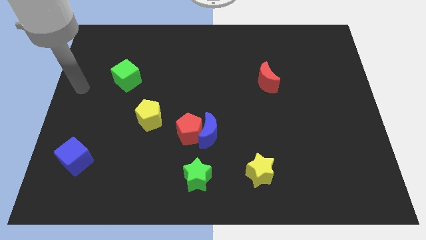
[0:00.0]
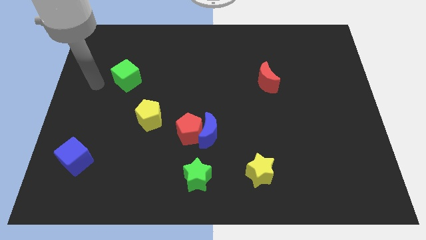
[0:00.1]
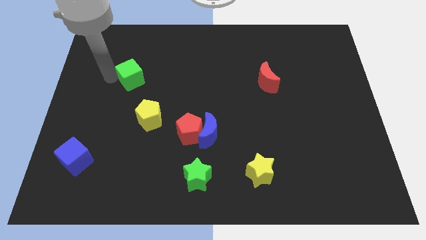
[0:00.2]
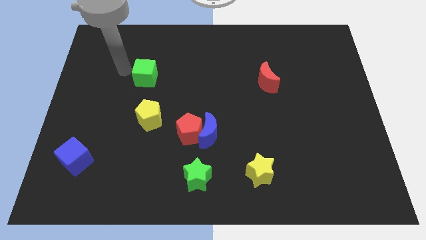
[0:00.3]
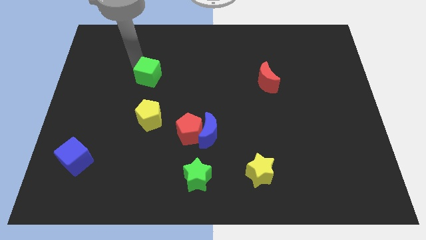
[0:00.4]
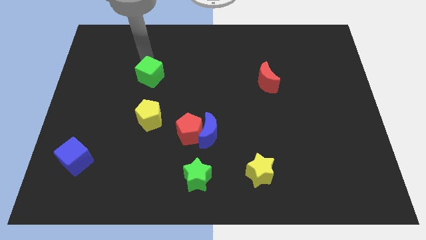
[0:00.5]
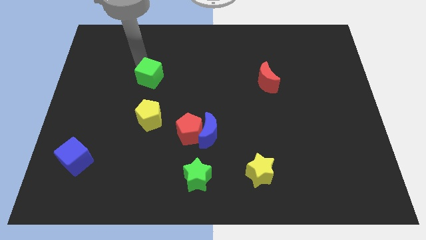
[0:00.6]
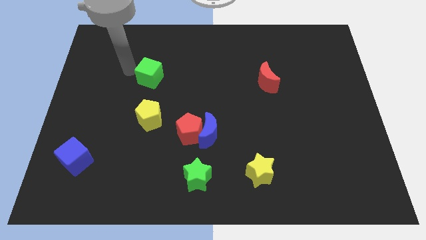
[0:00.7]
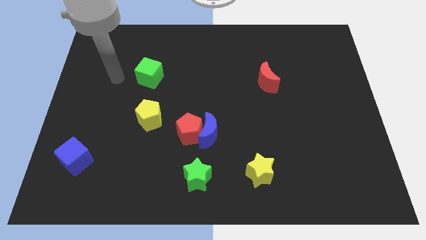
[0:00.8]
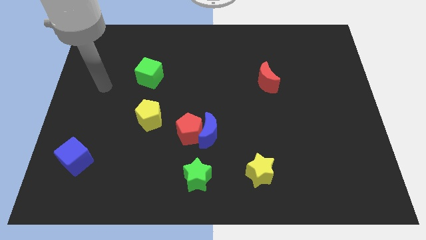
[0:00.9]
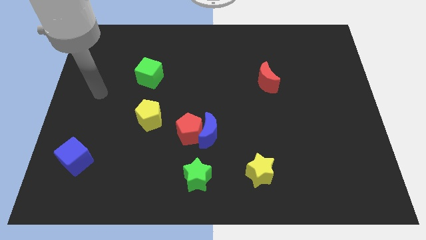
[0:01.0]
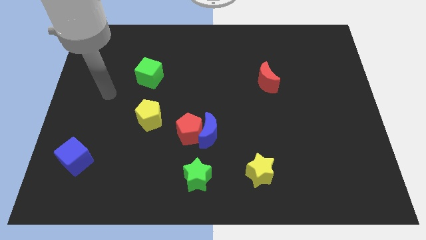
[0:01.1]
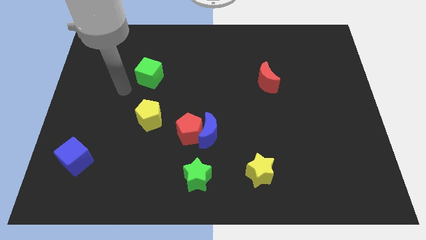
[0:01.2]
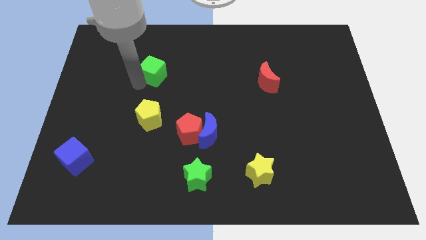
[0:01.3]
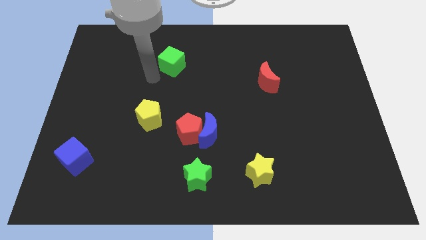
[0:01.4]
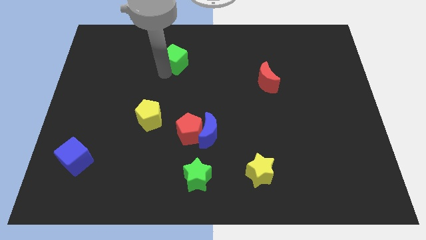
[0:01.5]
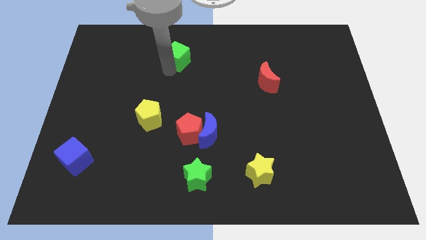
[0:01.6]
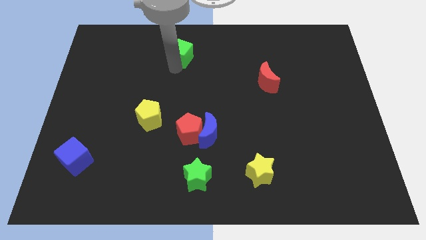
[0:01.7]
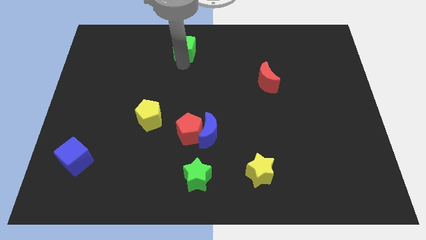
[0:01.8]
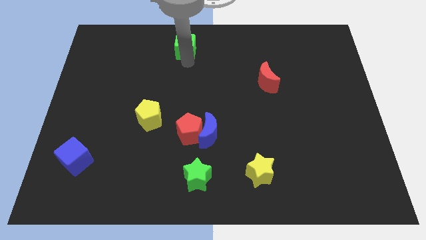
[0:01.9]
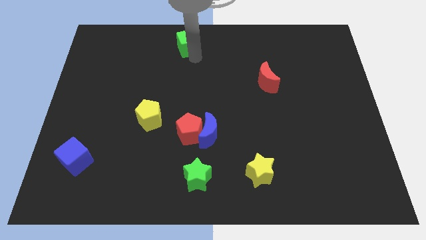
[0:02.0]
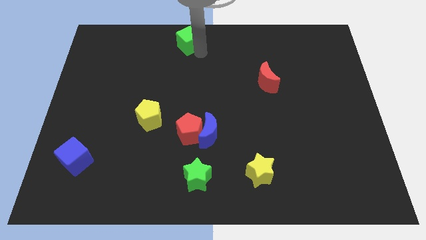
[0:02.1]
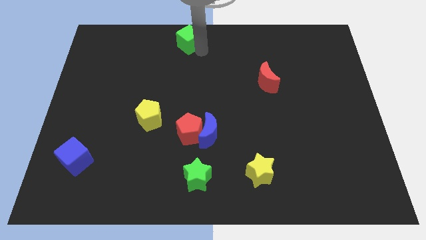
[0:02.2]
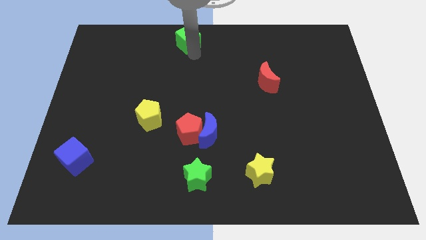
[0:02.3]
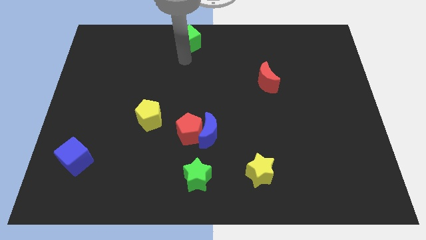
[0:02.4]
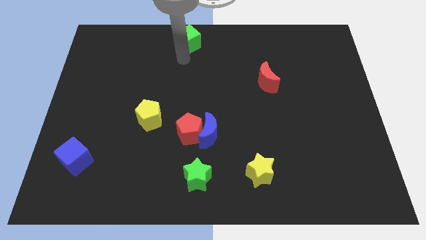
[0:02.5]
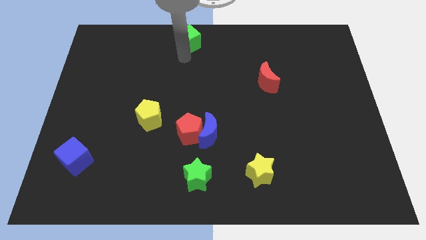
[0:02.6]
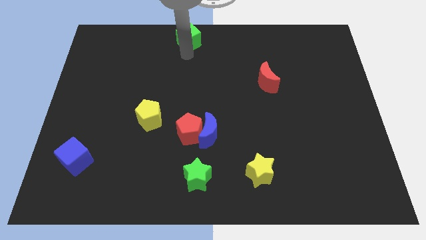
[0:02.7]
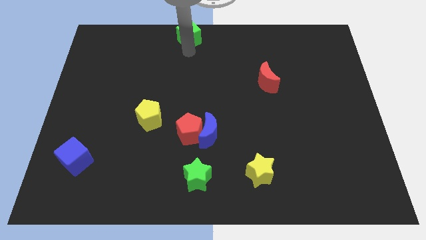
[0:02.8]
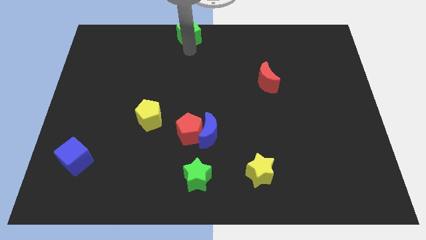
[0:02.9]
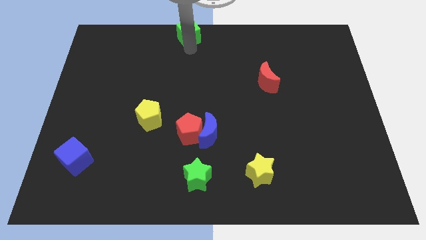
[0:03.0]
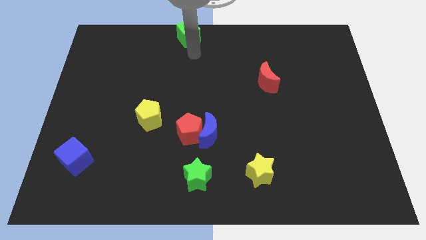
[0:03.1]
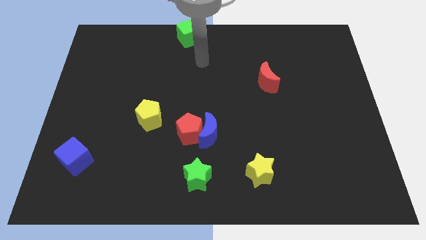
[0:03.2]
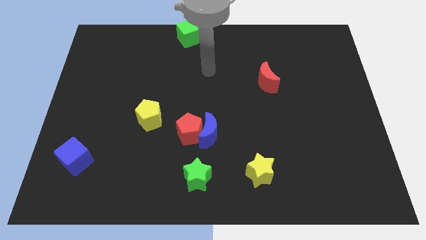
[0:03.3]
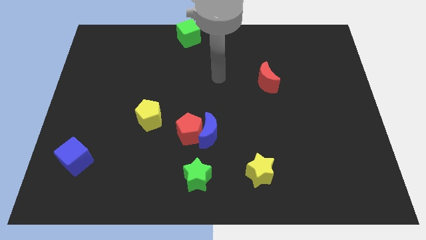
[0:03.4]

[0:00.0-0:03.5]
push the green cube to the top center of the board

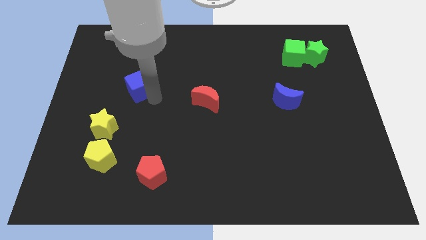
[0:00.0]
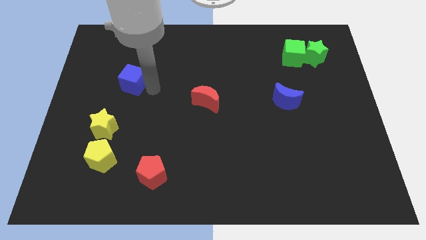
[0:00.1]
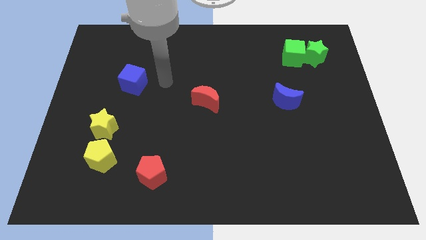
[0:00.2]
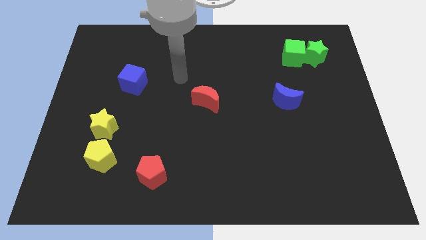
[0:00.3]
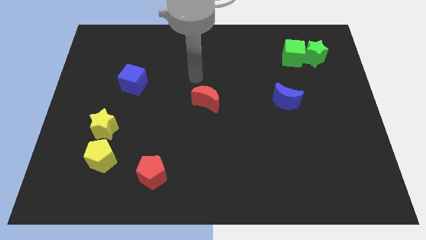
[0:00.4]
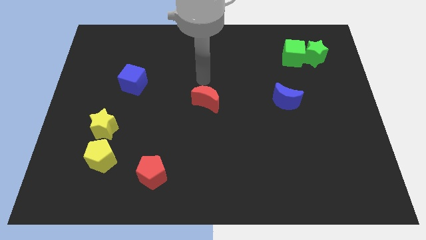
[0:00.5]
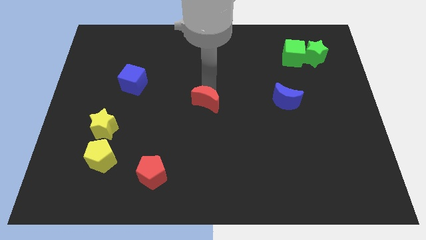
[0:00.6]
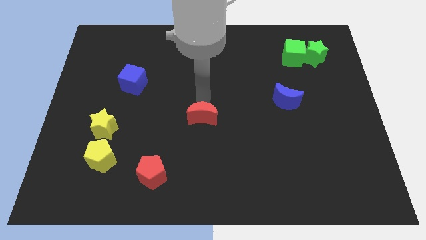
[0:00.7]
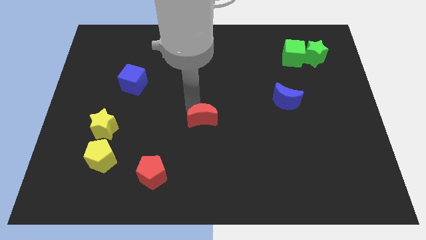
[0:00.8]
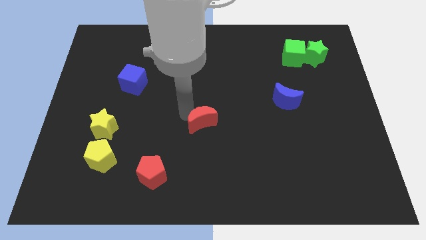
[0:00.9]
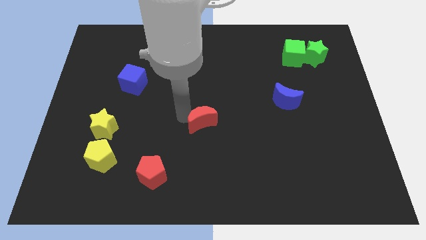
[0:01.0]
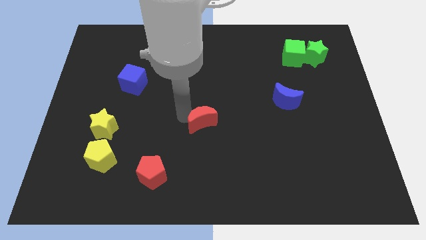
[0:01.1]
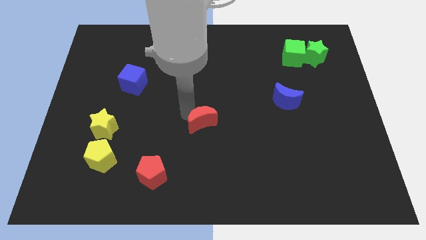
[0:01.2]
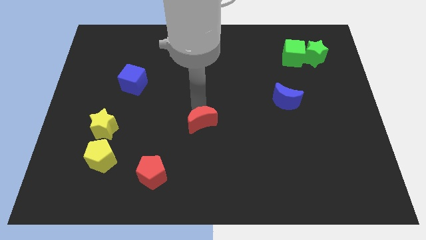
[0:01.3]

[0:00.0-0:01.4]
put the red crescent diagonally bottom right to the blue cube

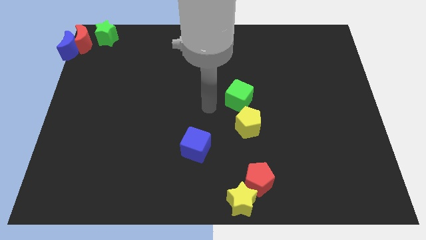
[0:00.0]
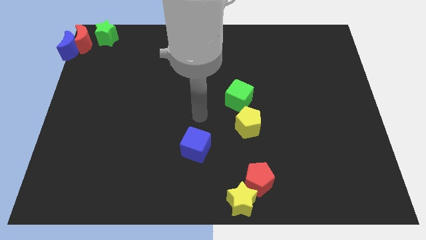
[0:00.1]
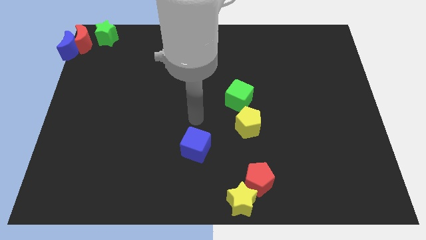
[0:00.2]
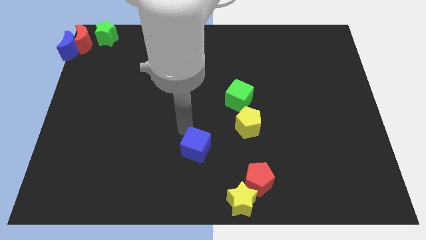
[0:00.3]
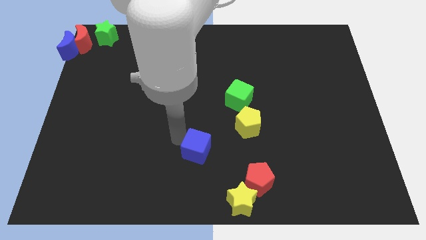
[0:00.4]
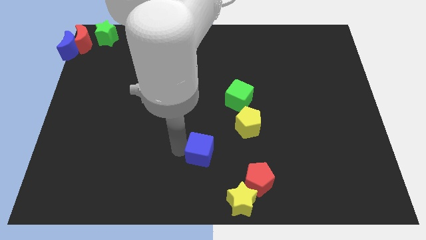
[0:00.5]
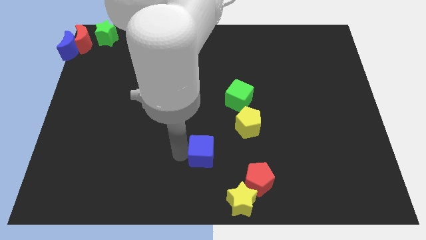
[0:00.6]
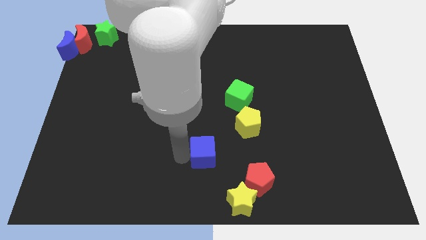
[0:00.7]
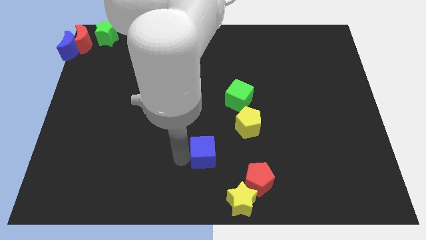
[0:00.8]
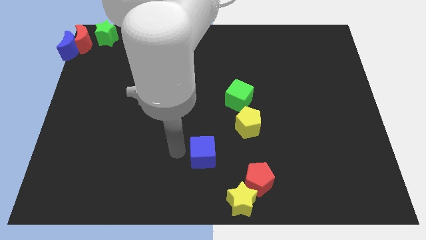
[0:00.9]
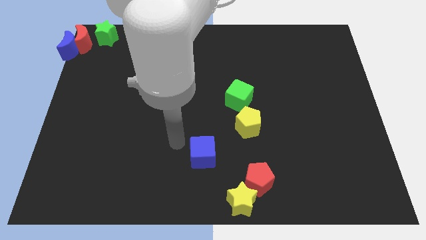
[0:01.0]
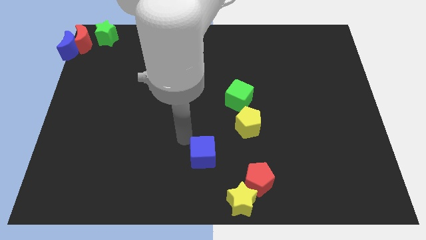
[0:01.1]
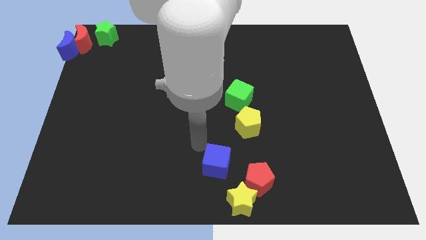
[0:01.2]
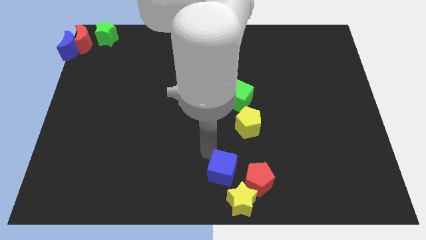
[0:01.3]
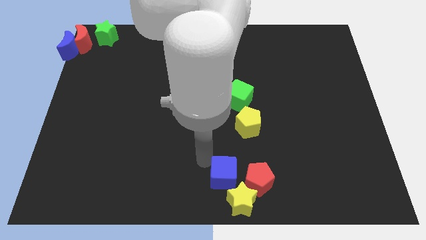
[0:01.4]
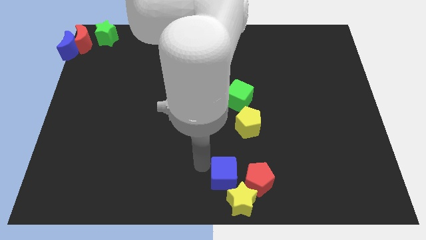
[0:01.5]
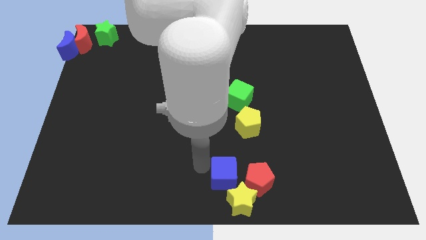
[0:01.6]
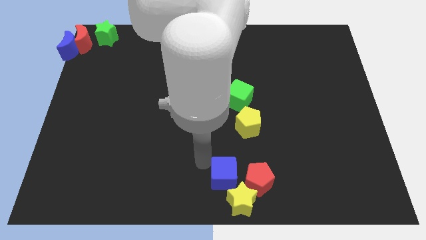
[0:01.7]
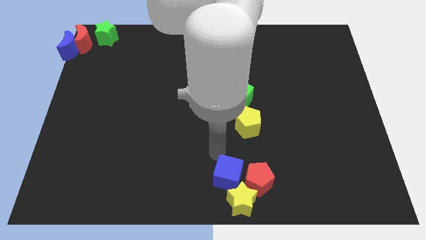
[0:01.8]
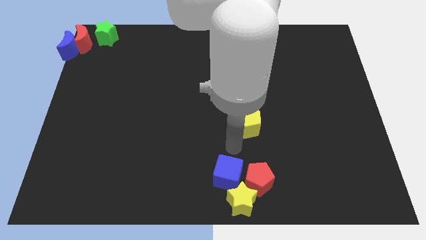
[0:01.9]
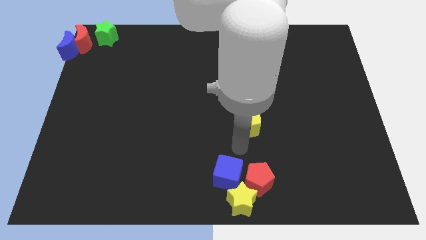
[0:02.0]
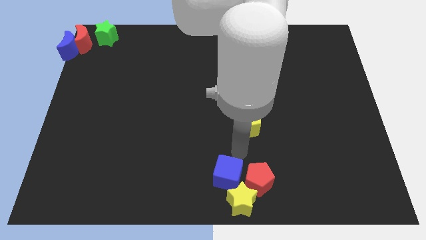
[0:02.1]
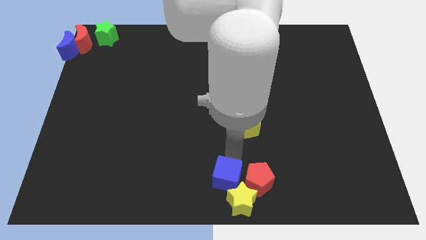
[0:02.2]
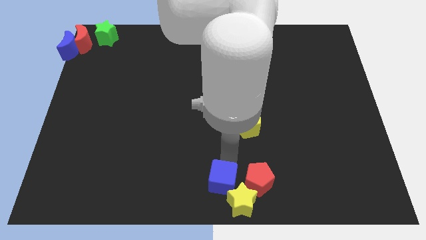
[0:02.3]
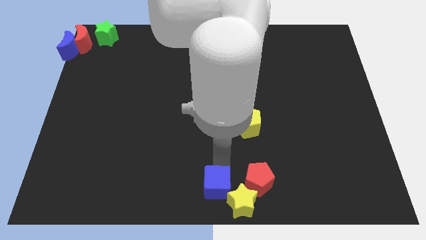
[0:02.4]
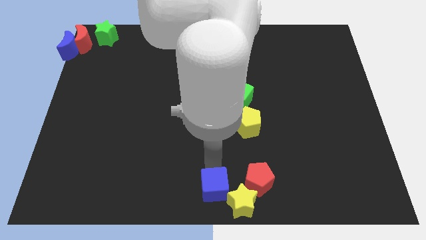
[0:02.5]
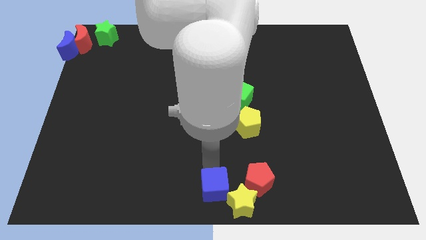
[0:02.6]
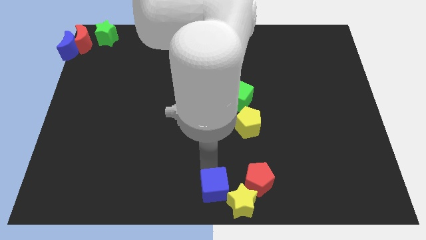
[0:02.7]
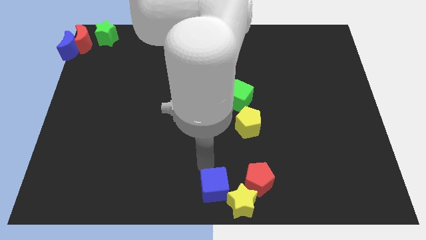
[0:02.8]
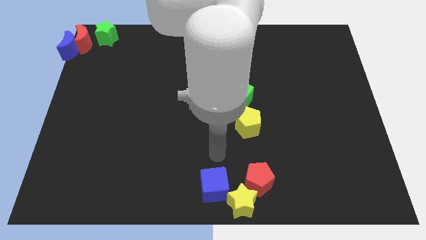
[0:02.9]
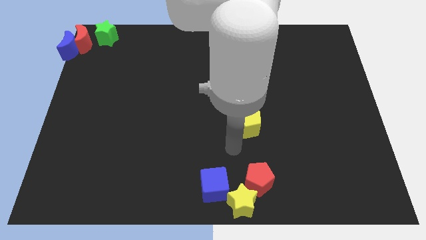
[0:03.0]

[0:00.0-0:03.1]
place the blue cube parallel left to the red pentagon

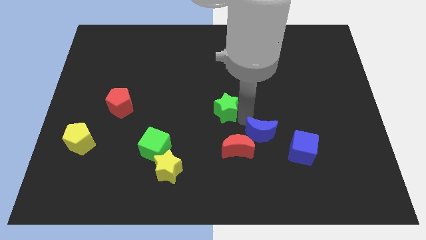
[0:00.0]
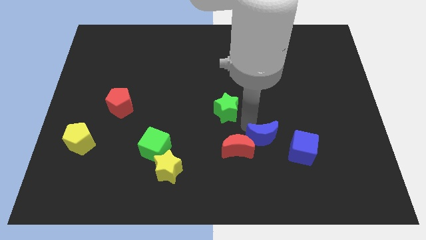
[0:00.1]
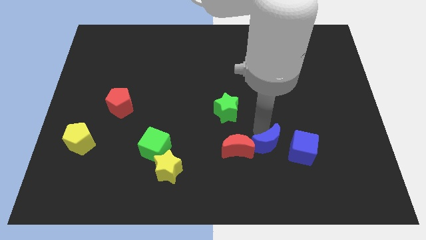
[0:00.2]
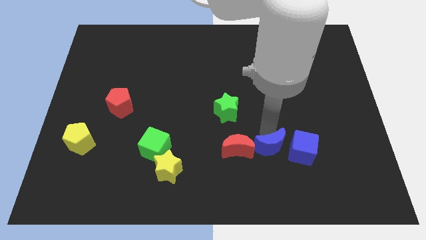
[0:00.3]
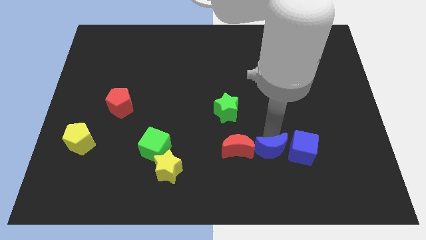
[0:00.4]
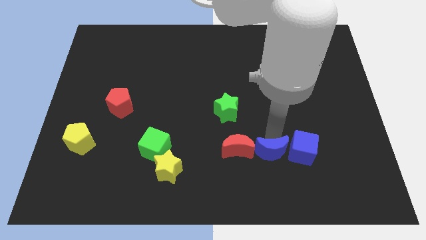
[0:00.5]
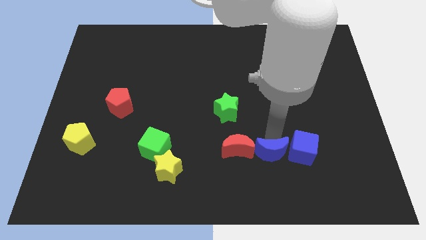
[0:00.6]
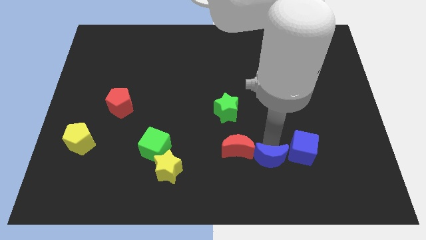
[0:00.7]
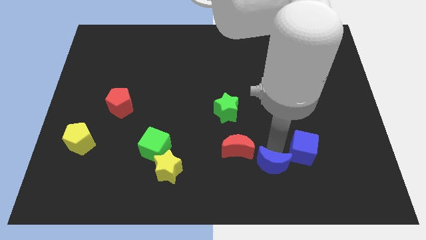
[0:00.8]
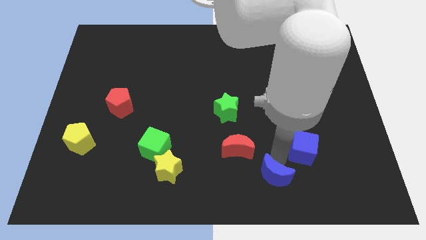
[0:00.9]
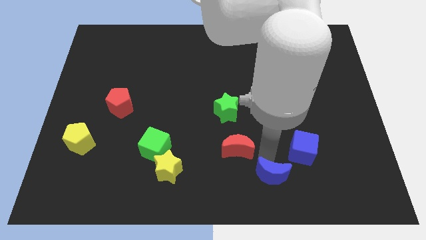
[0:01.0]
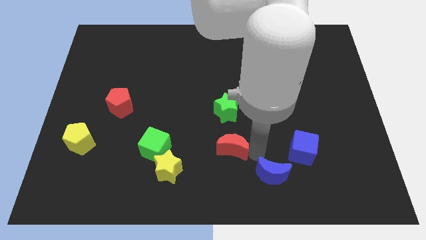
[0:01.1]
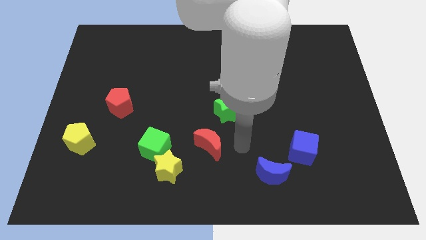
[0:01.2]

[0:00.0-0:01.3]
separate the blue crescent and the red moon
